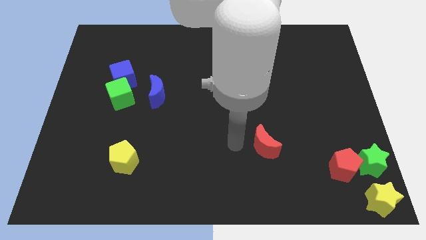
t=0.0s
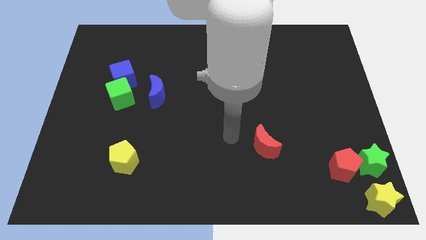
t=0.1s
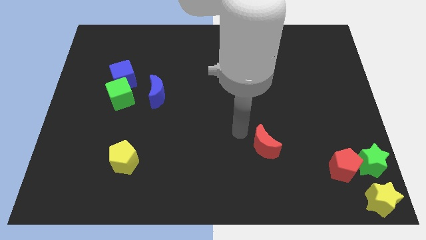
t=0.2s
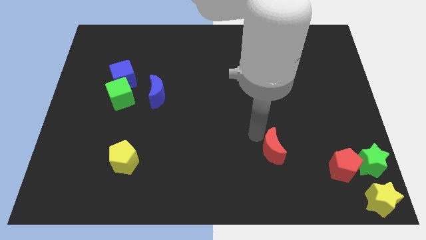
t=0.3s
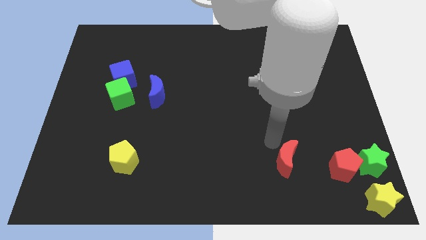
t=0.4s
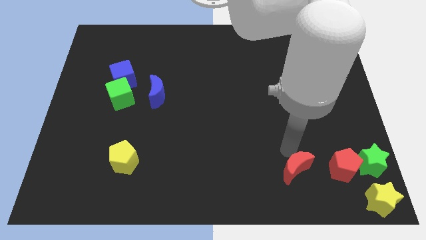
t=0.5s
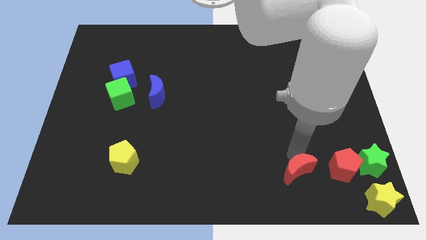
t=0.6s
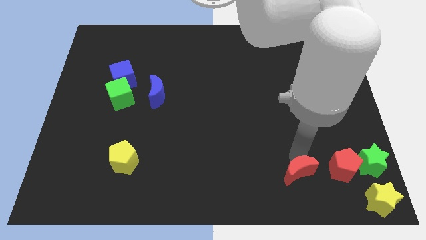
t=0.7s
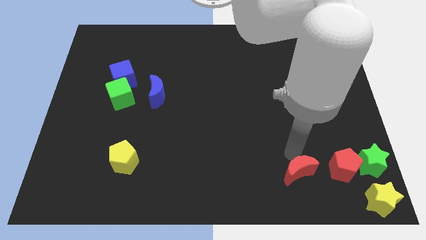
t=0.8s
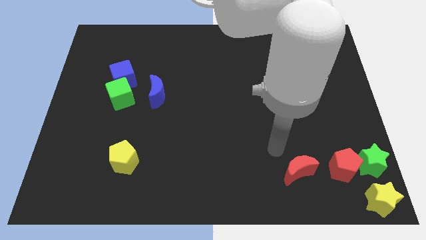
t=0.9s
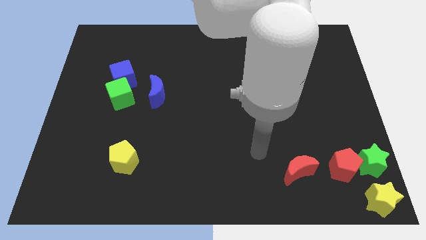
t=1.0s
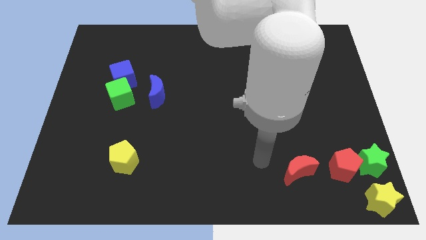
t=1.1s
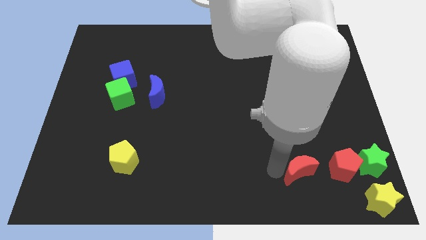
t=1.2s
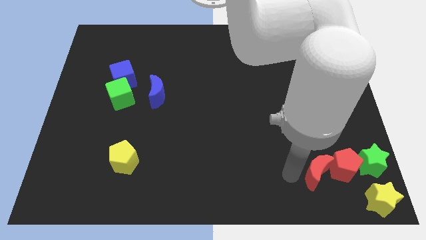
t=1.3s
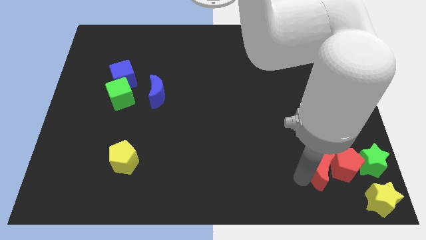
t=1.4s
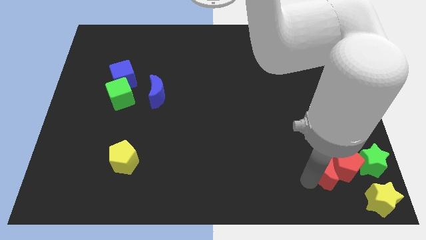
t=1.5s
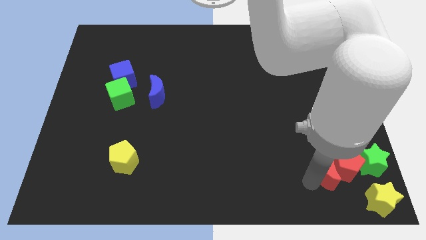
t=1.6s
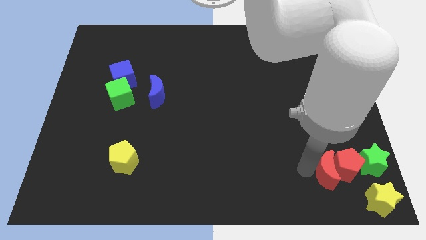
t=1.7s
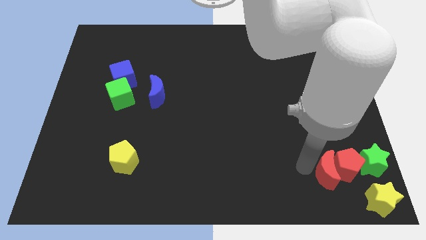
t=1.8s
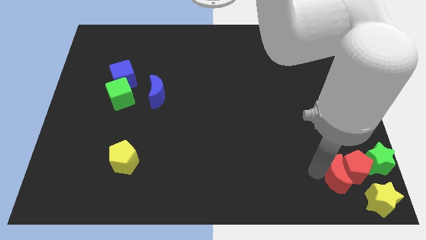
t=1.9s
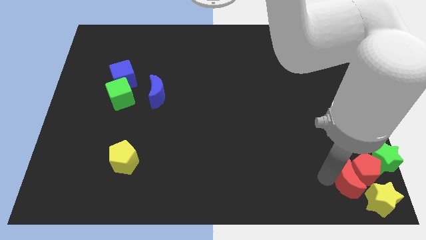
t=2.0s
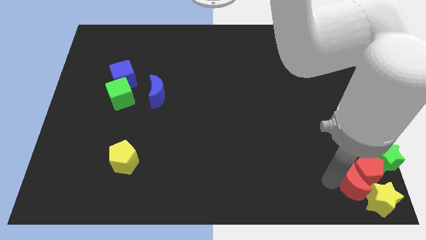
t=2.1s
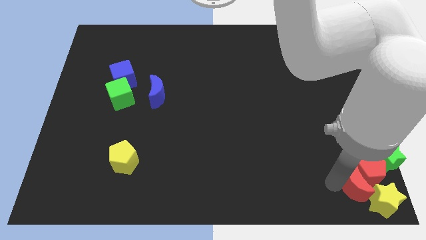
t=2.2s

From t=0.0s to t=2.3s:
push the red crescent into the red pentagon

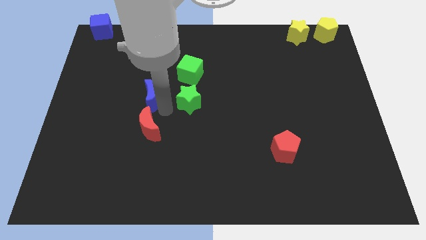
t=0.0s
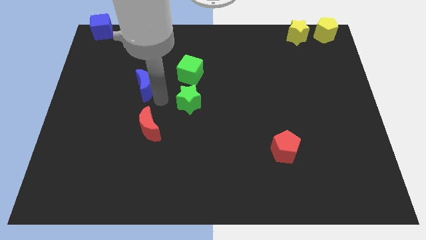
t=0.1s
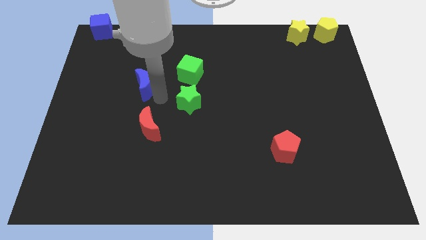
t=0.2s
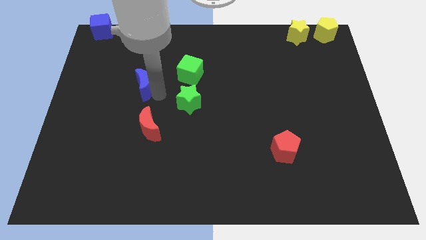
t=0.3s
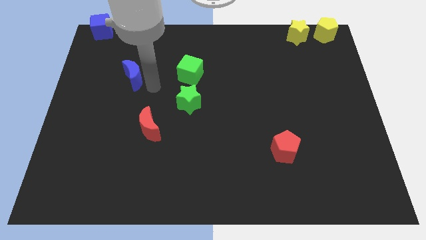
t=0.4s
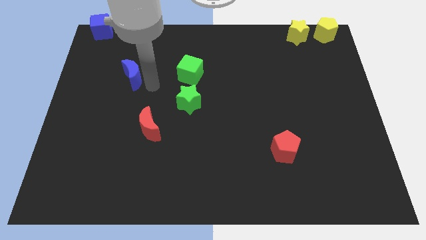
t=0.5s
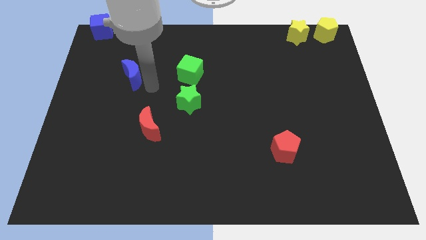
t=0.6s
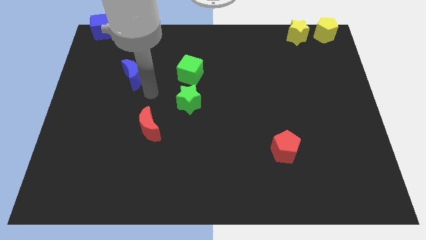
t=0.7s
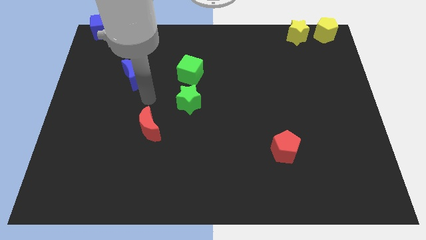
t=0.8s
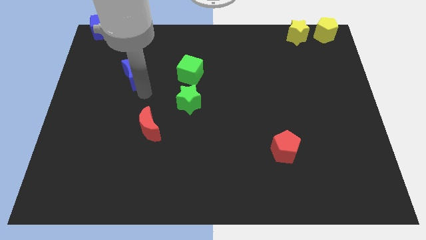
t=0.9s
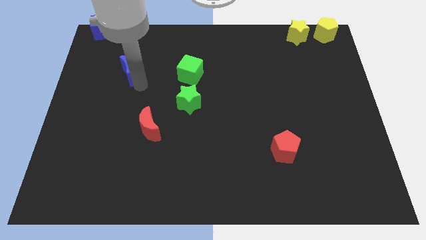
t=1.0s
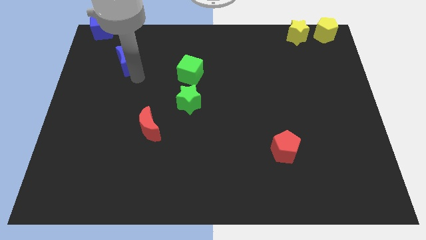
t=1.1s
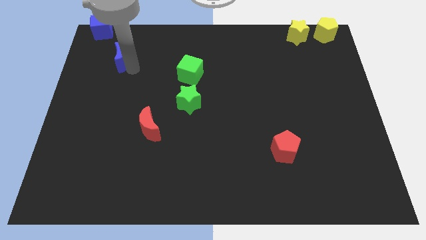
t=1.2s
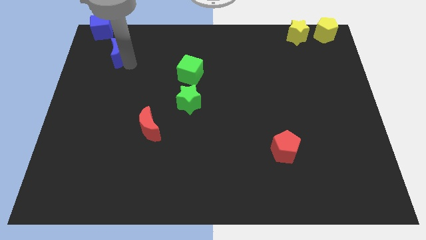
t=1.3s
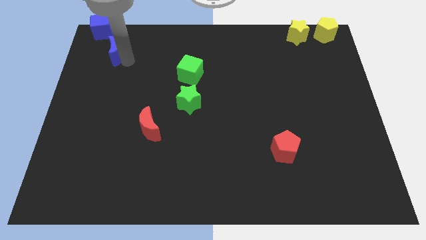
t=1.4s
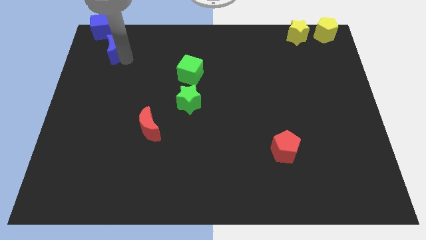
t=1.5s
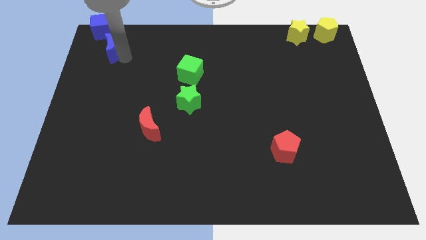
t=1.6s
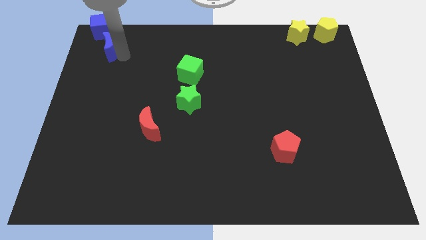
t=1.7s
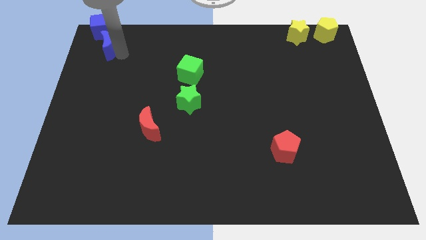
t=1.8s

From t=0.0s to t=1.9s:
push the blue moon to left corner of the board towards the blue cube

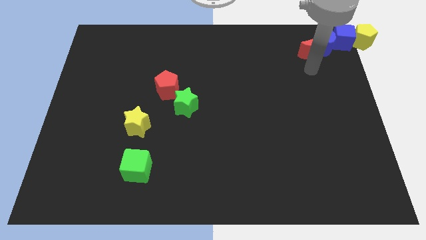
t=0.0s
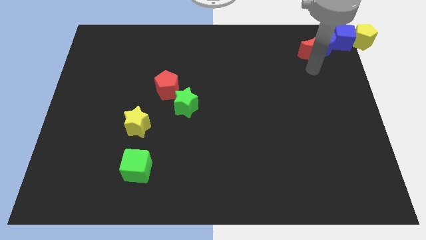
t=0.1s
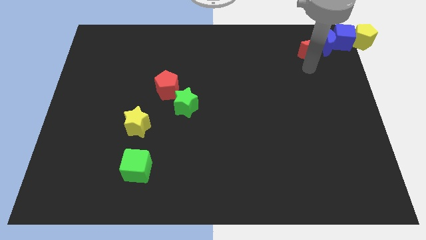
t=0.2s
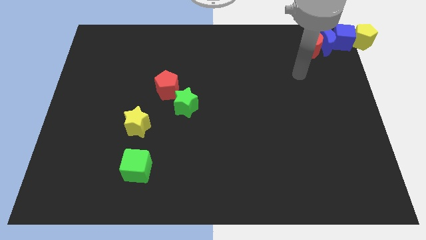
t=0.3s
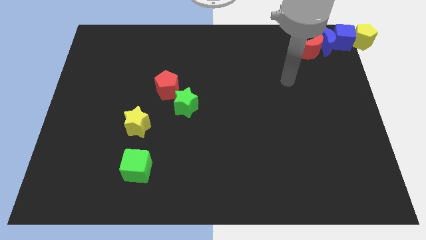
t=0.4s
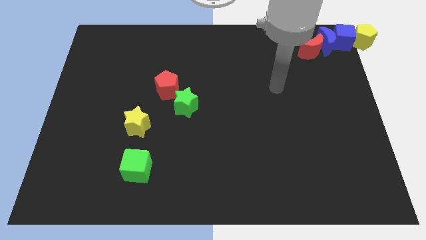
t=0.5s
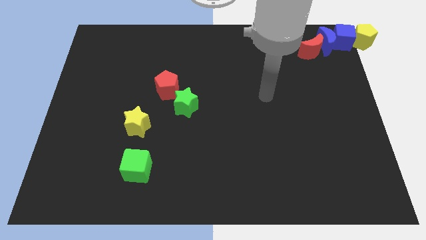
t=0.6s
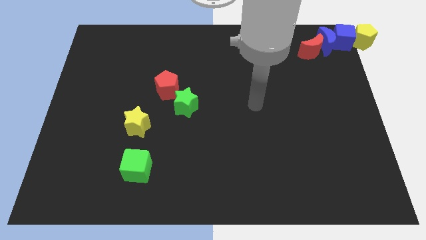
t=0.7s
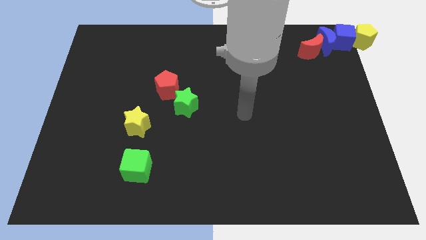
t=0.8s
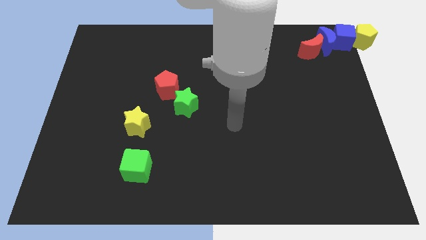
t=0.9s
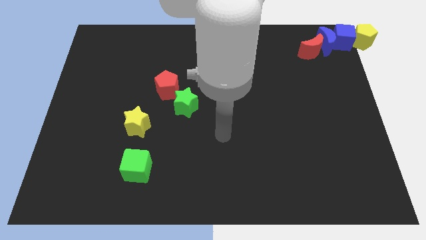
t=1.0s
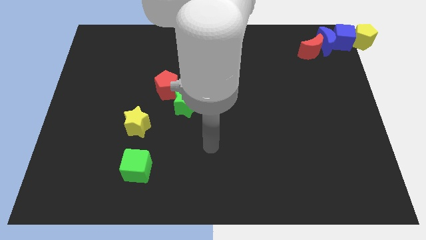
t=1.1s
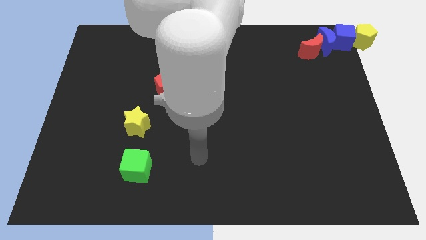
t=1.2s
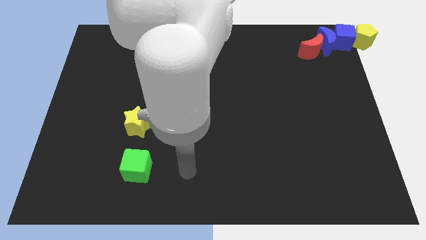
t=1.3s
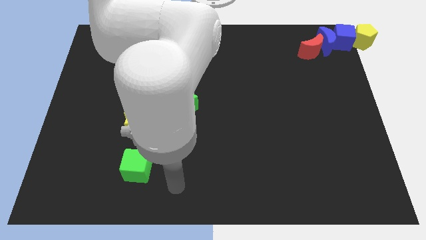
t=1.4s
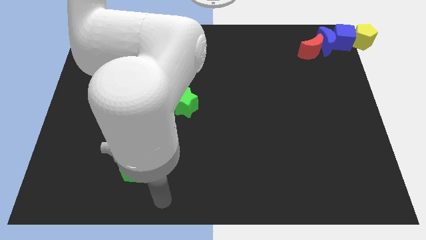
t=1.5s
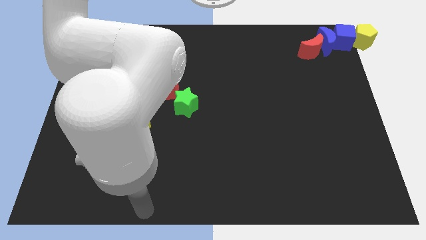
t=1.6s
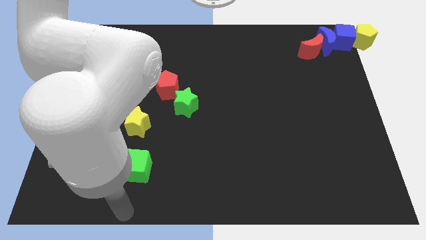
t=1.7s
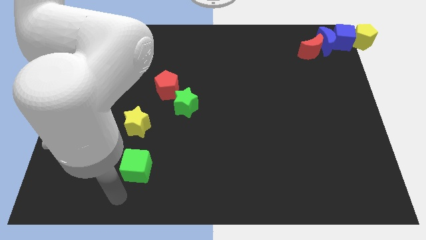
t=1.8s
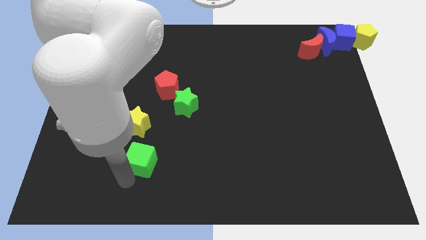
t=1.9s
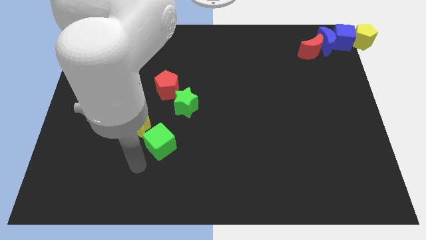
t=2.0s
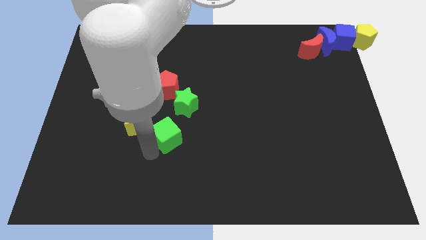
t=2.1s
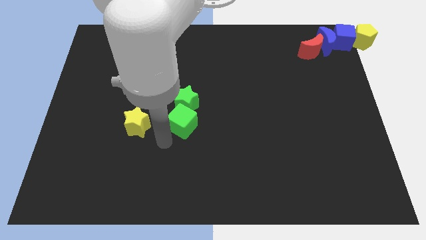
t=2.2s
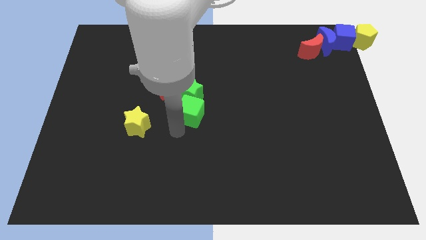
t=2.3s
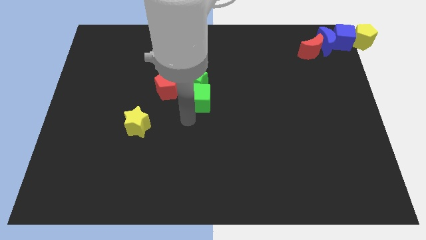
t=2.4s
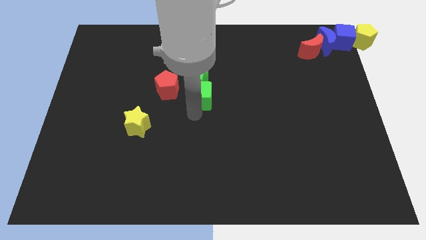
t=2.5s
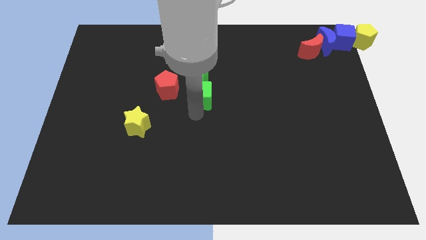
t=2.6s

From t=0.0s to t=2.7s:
move the arm away from the red moon

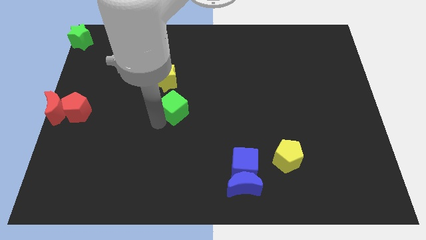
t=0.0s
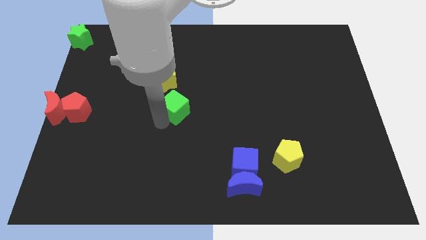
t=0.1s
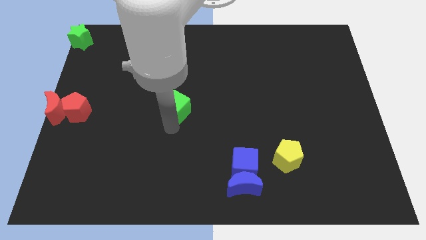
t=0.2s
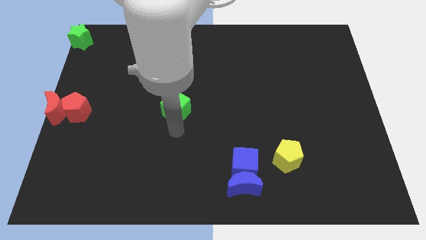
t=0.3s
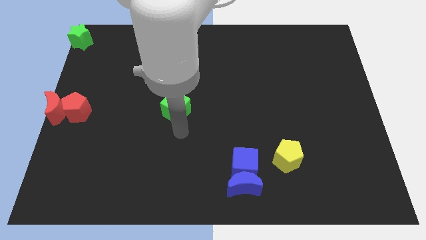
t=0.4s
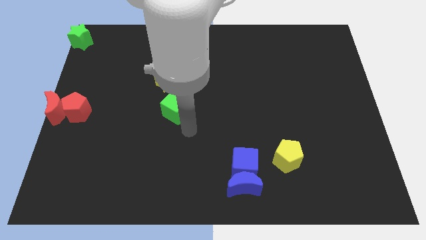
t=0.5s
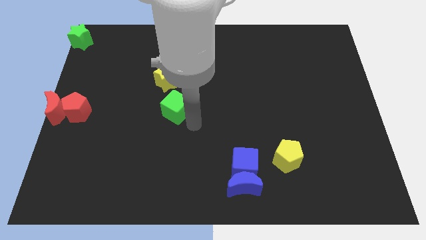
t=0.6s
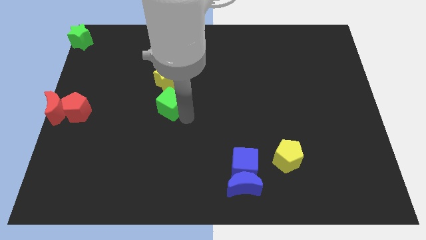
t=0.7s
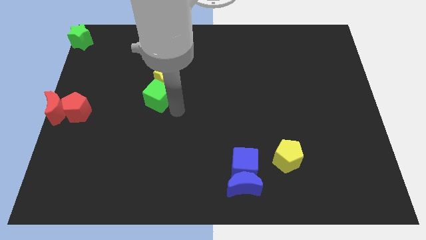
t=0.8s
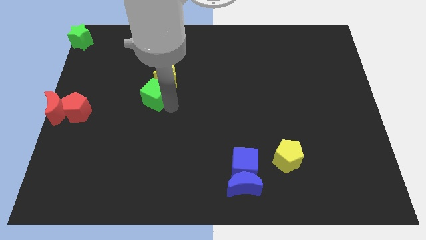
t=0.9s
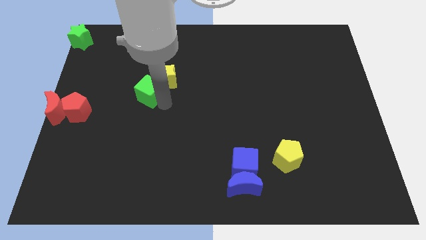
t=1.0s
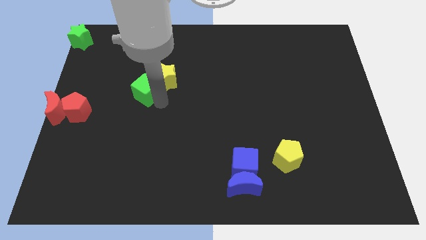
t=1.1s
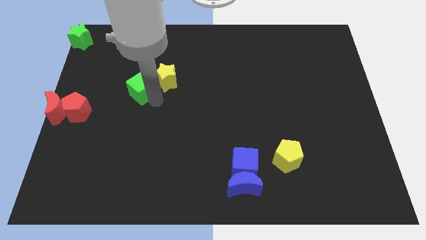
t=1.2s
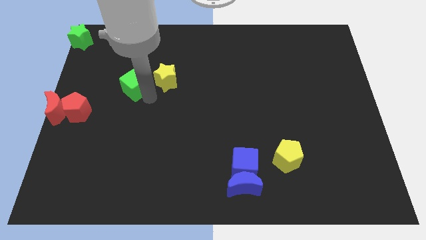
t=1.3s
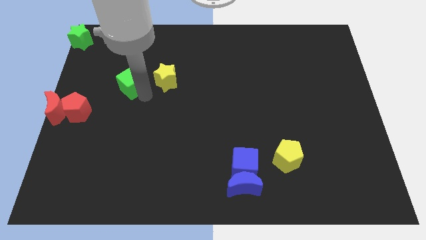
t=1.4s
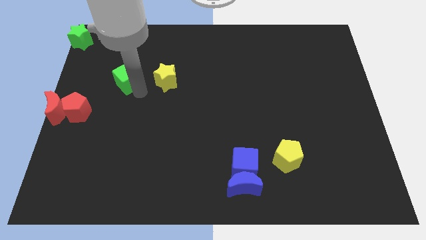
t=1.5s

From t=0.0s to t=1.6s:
put the green cube left to the yellow star

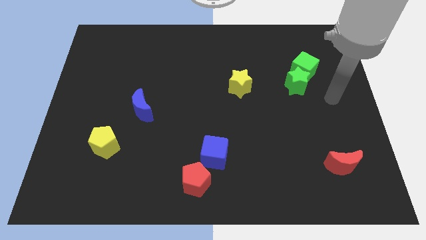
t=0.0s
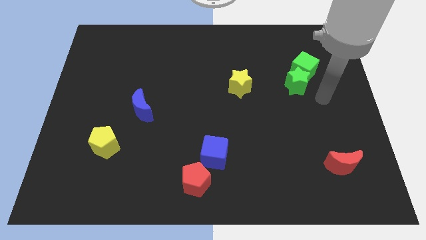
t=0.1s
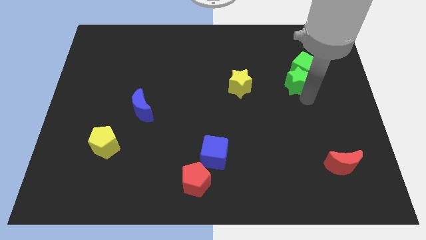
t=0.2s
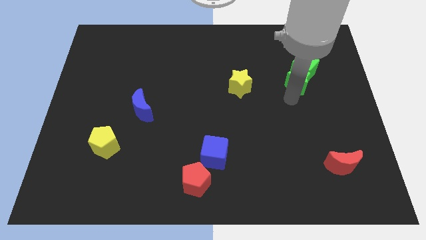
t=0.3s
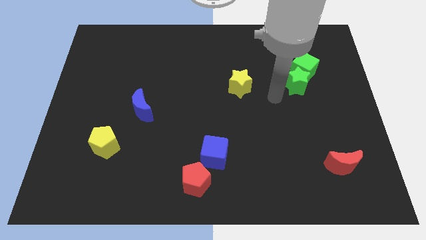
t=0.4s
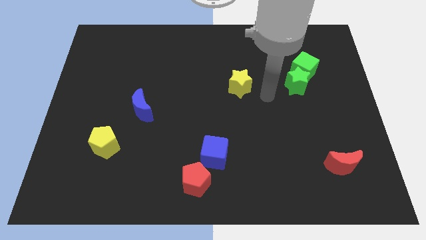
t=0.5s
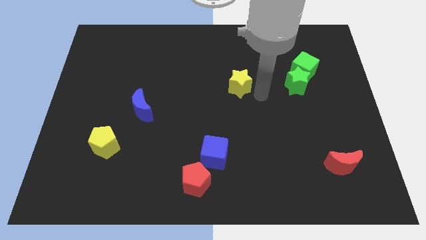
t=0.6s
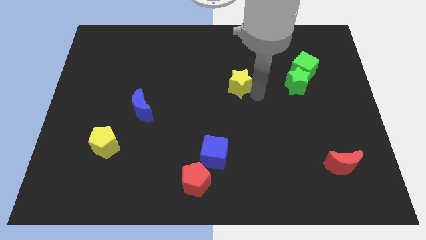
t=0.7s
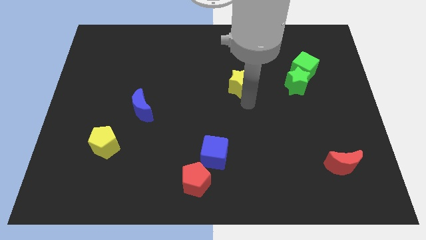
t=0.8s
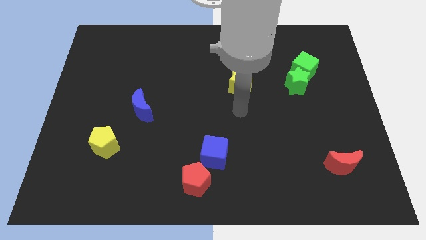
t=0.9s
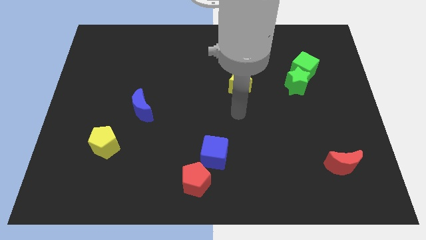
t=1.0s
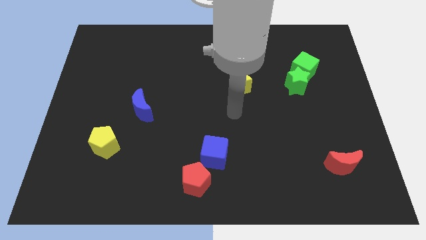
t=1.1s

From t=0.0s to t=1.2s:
point your hand below the yellow star
